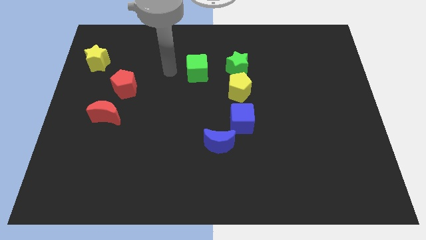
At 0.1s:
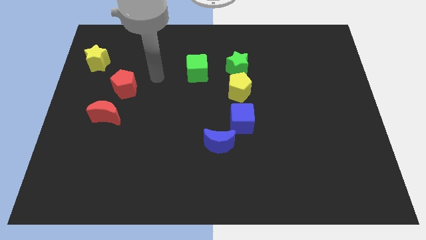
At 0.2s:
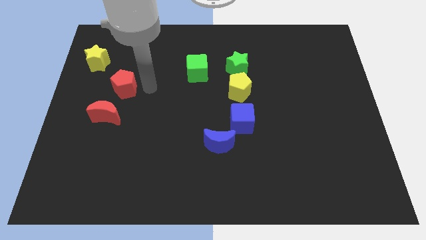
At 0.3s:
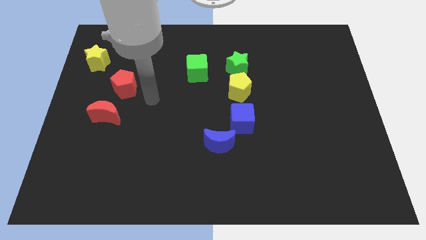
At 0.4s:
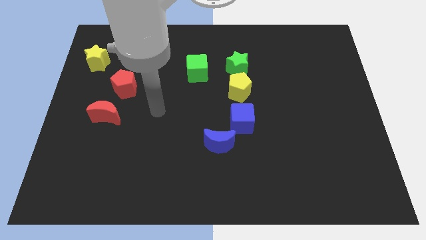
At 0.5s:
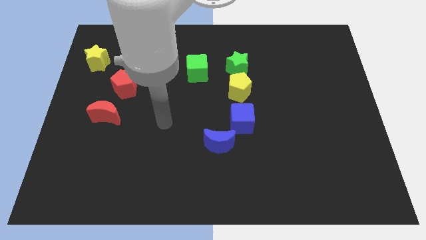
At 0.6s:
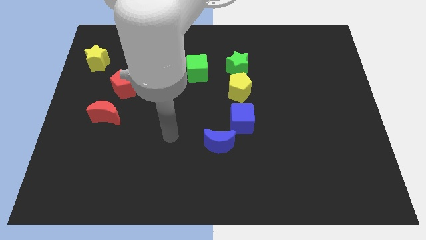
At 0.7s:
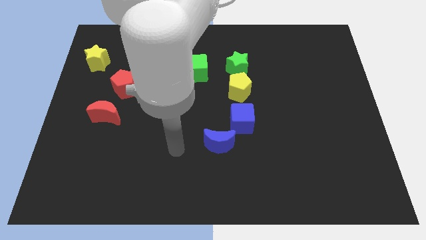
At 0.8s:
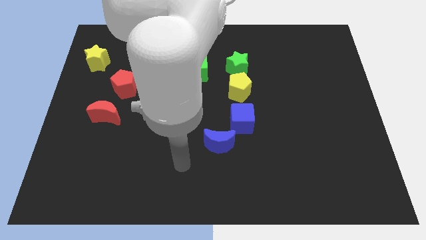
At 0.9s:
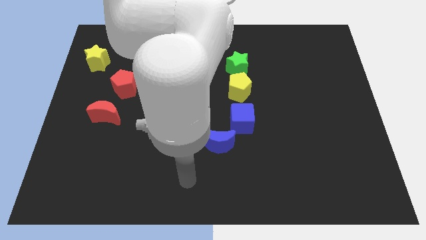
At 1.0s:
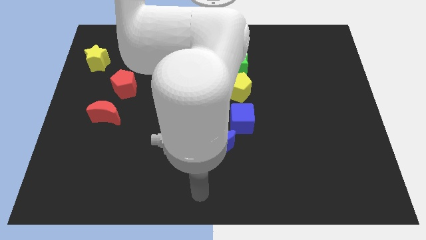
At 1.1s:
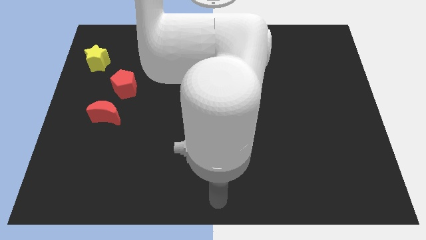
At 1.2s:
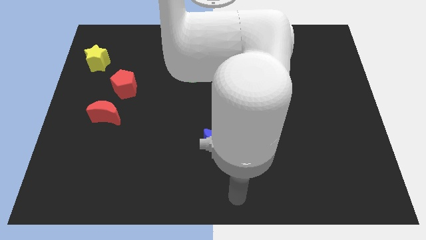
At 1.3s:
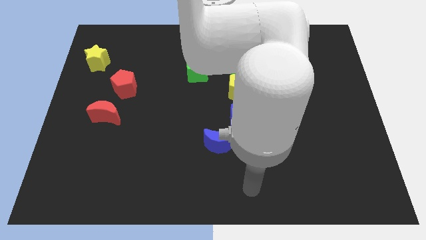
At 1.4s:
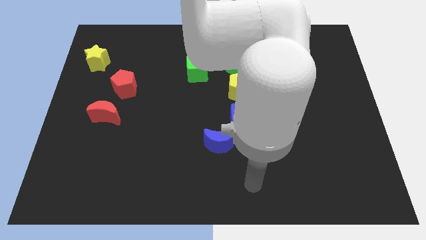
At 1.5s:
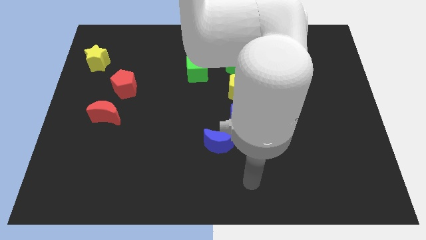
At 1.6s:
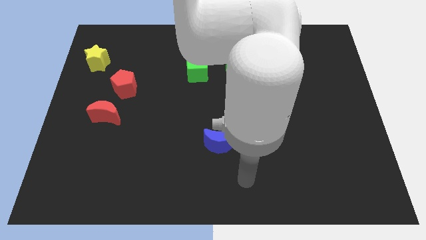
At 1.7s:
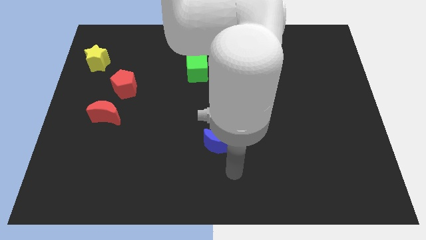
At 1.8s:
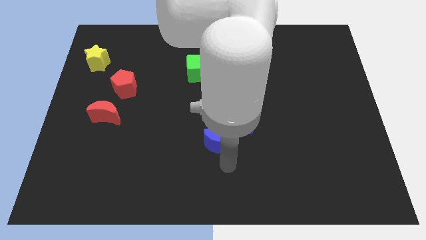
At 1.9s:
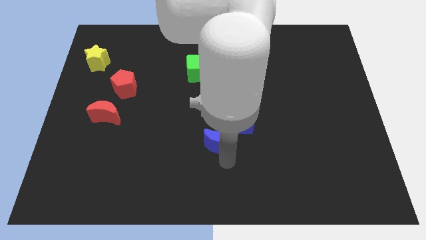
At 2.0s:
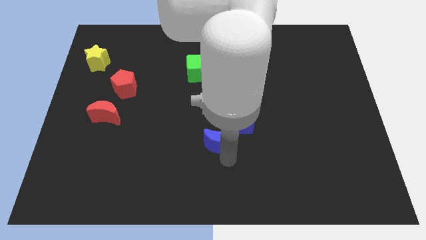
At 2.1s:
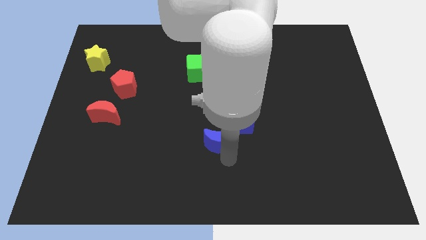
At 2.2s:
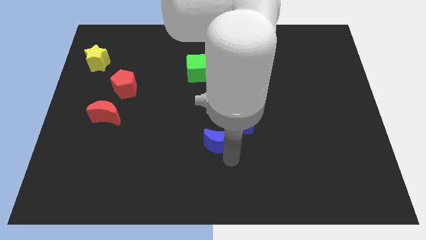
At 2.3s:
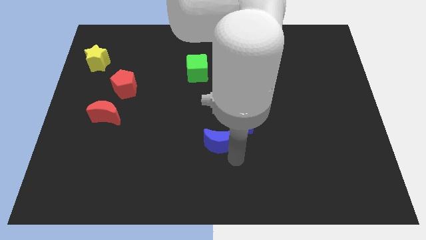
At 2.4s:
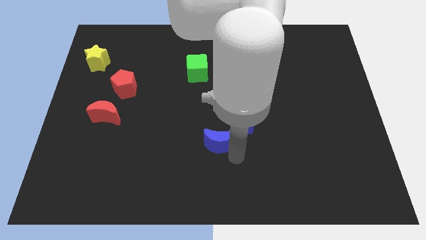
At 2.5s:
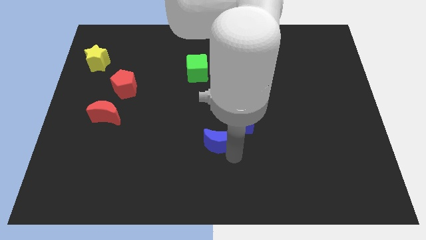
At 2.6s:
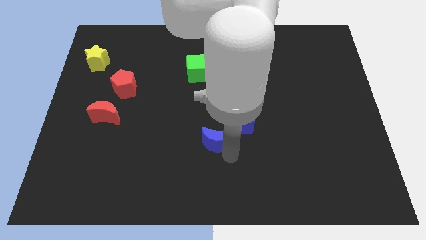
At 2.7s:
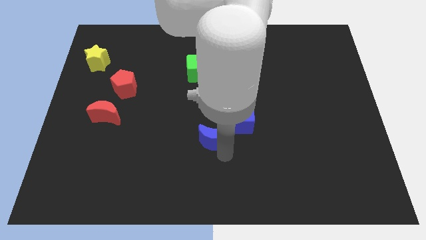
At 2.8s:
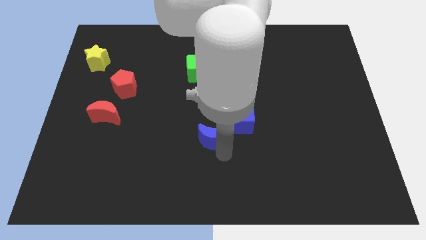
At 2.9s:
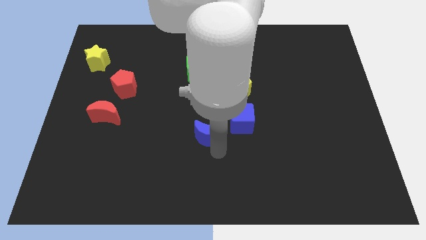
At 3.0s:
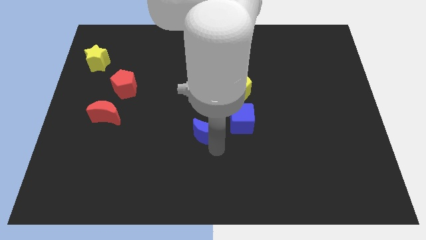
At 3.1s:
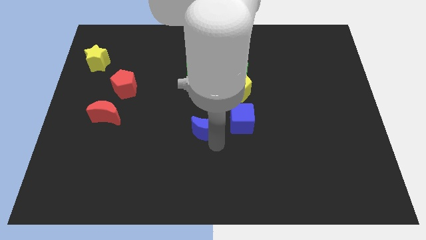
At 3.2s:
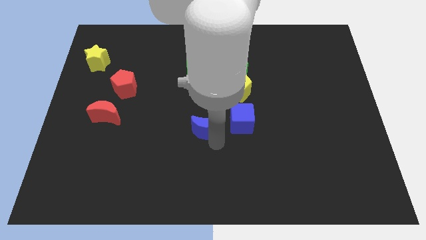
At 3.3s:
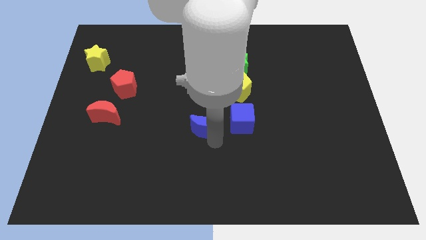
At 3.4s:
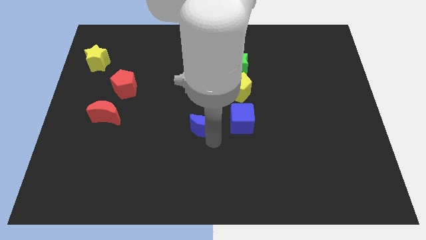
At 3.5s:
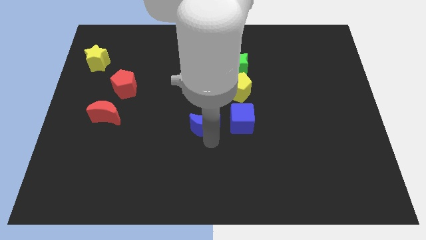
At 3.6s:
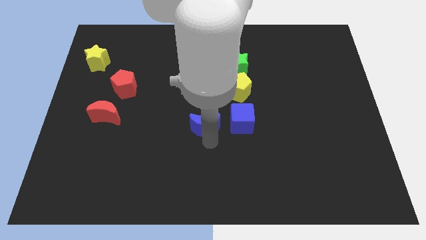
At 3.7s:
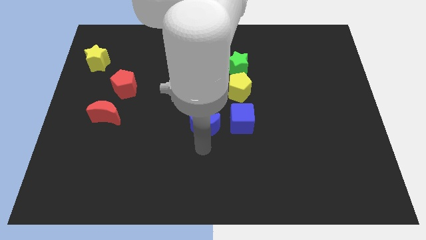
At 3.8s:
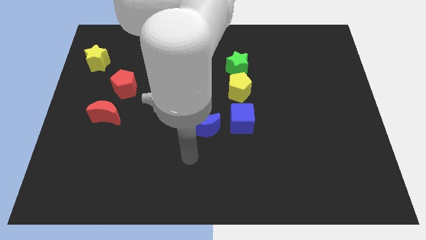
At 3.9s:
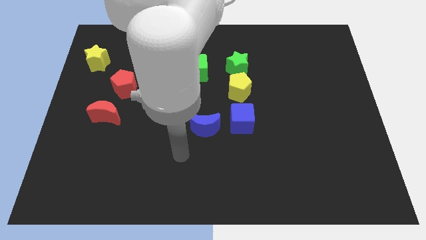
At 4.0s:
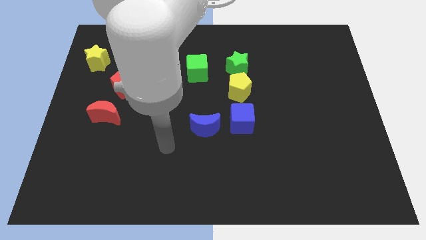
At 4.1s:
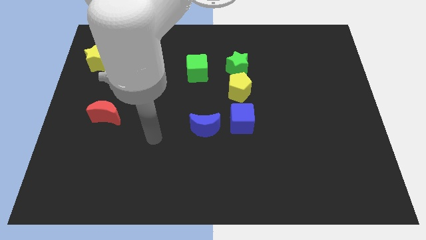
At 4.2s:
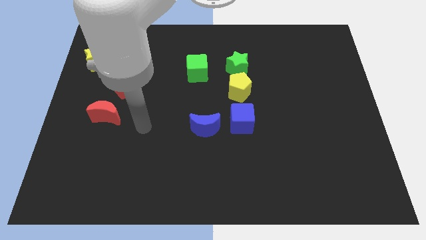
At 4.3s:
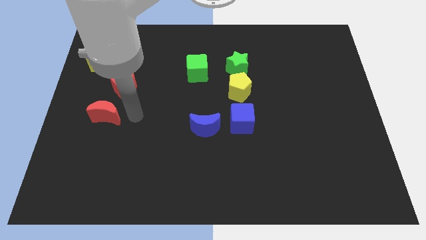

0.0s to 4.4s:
place the blue crescent to the left of the blue cube

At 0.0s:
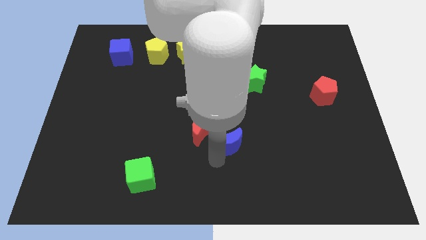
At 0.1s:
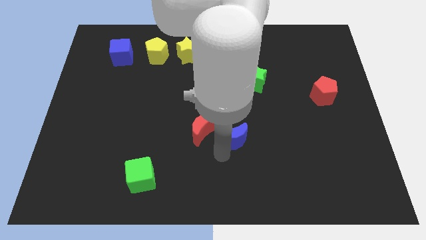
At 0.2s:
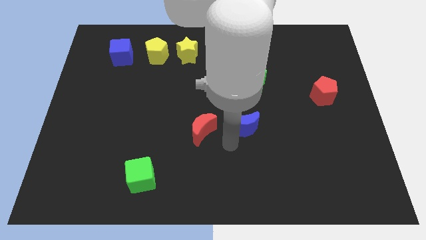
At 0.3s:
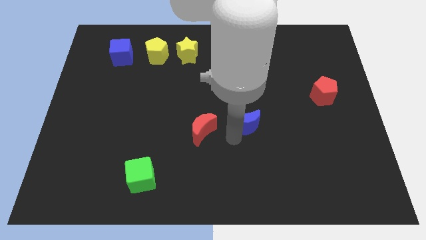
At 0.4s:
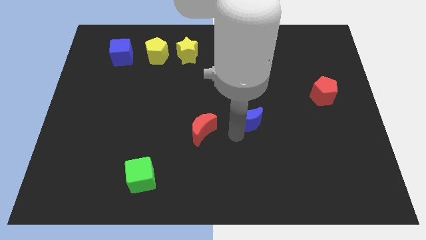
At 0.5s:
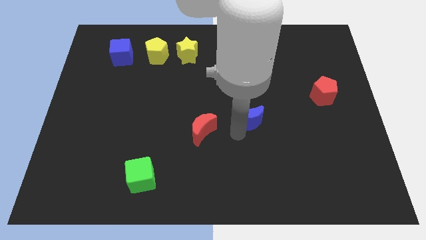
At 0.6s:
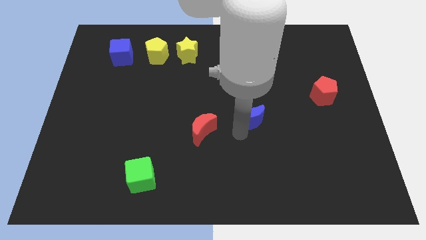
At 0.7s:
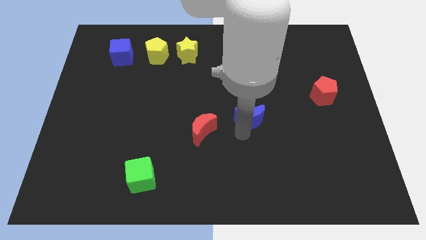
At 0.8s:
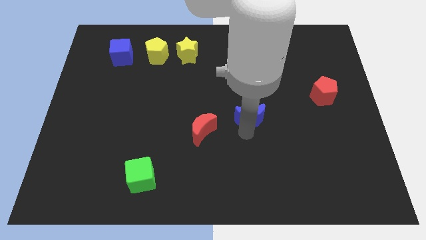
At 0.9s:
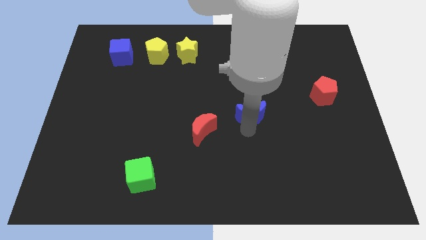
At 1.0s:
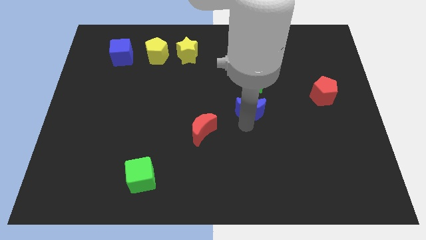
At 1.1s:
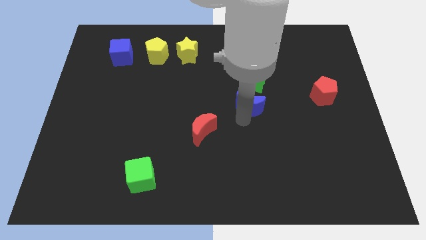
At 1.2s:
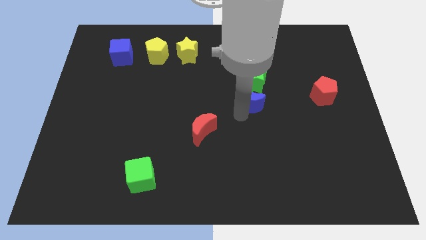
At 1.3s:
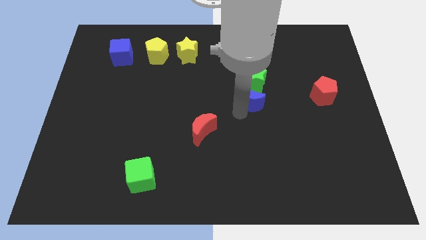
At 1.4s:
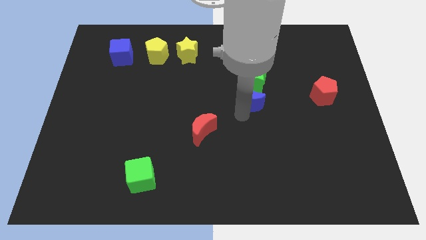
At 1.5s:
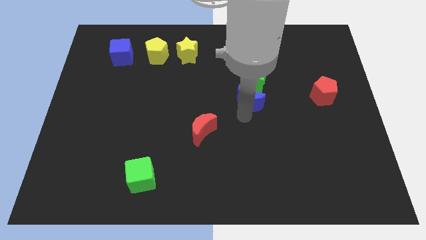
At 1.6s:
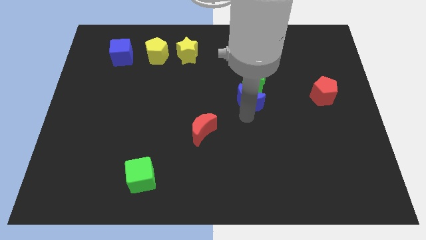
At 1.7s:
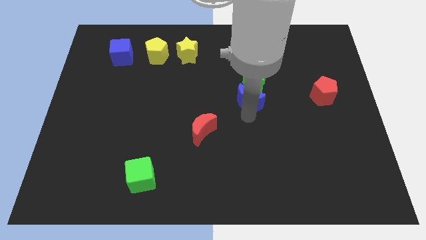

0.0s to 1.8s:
push blue moon close to the green star

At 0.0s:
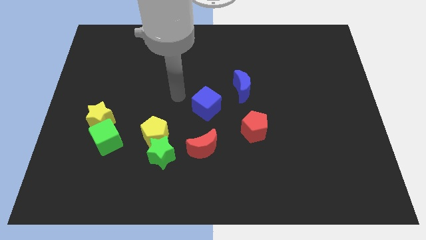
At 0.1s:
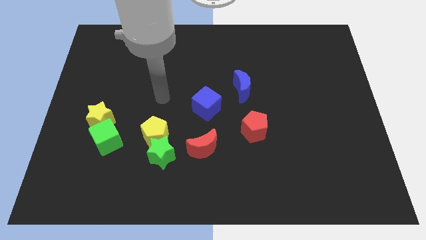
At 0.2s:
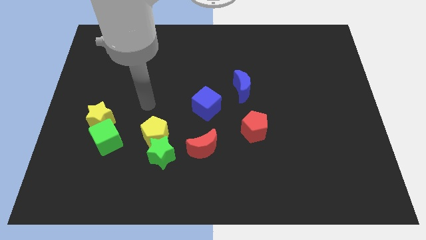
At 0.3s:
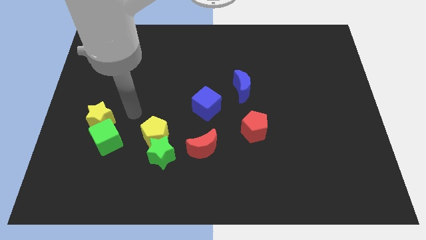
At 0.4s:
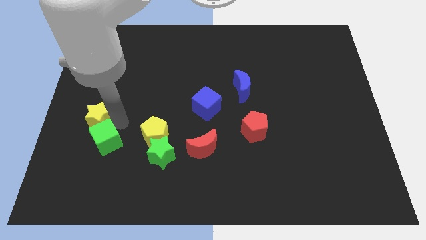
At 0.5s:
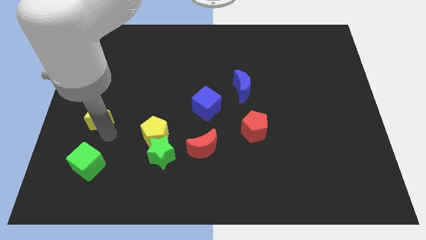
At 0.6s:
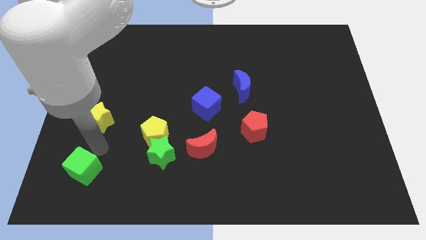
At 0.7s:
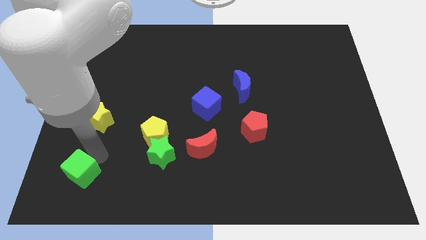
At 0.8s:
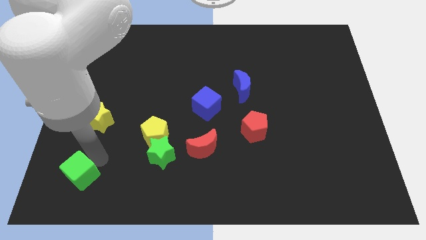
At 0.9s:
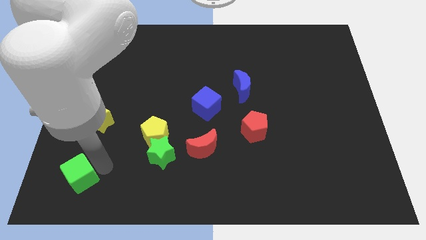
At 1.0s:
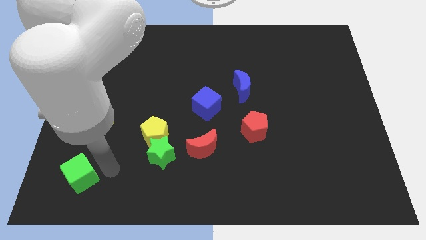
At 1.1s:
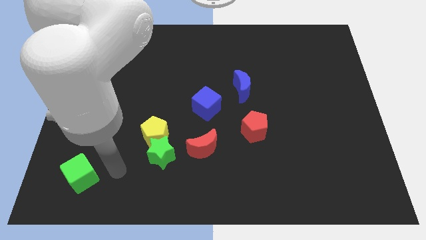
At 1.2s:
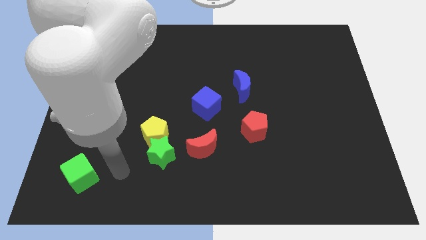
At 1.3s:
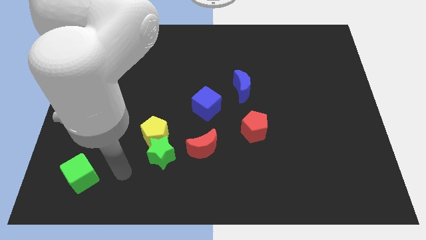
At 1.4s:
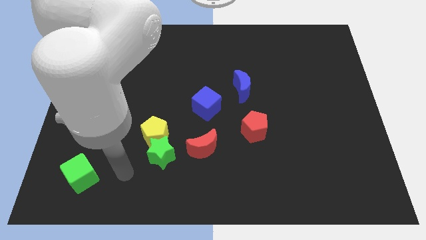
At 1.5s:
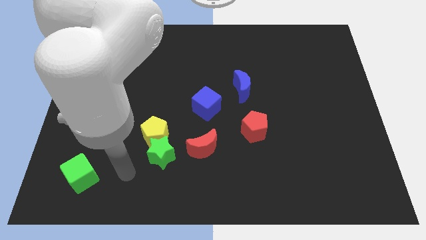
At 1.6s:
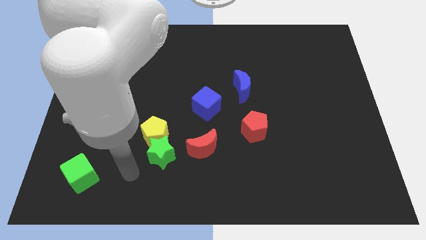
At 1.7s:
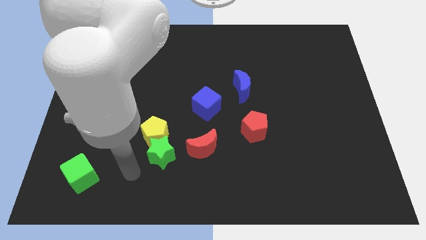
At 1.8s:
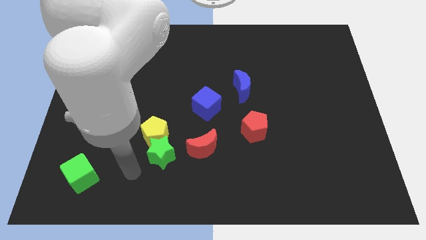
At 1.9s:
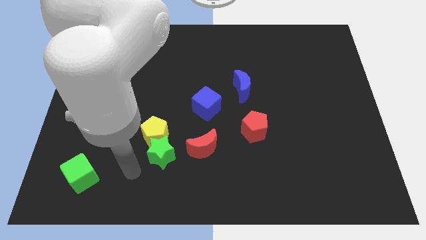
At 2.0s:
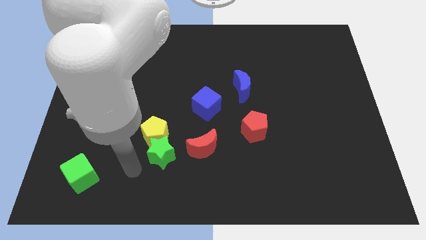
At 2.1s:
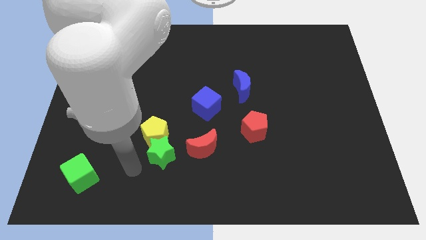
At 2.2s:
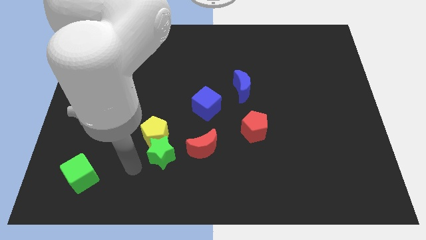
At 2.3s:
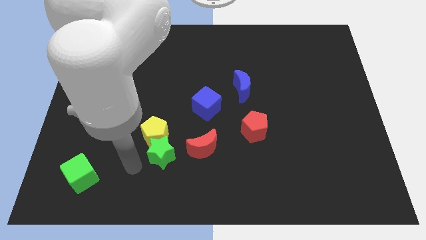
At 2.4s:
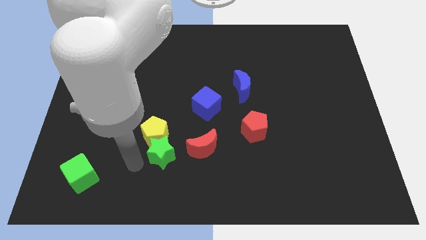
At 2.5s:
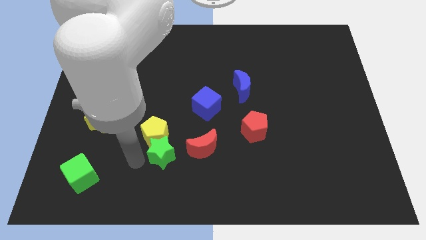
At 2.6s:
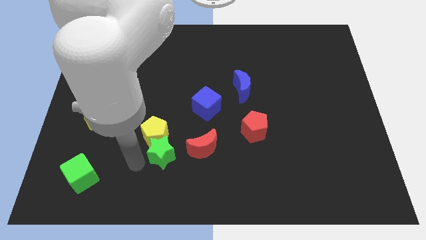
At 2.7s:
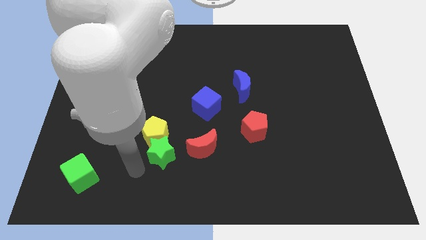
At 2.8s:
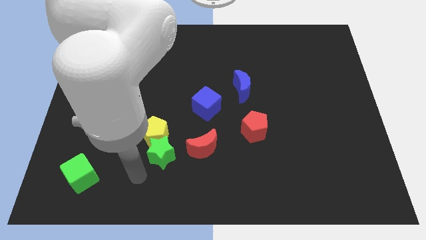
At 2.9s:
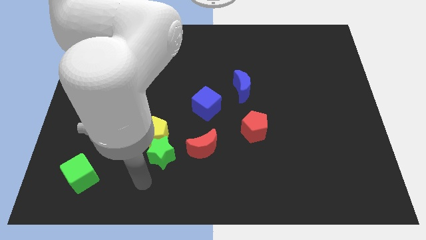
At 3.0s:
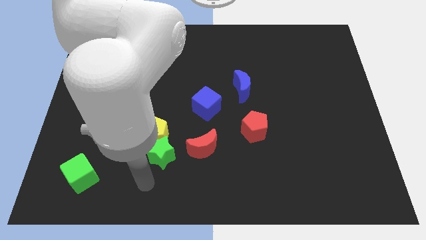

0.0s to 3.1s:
separate green cube from the yellow star
